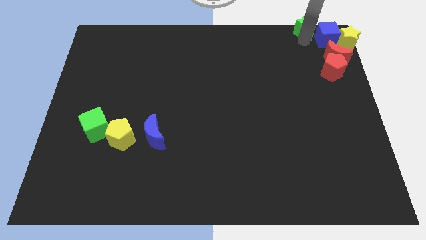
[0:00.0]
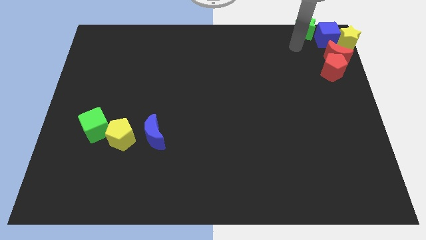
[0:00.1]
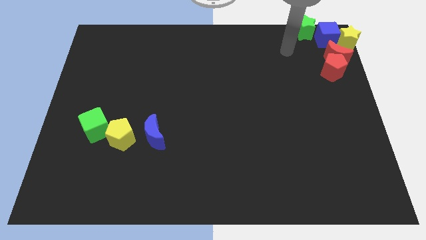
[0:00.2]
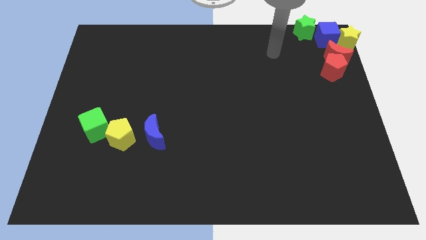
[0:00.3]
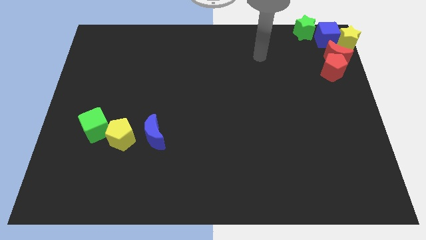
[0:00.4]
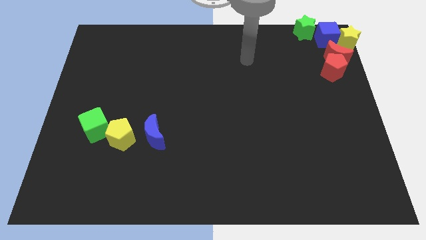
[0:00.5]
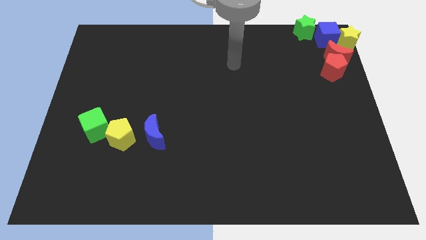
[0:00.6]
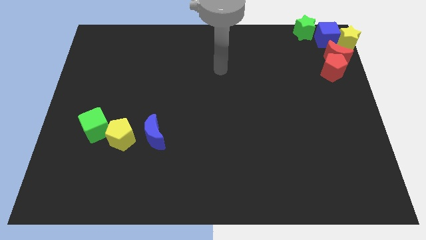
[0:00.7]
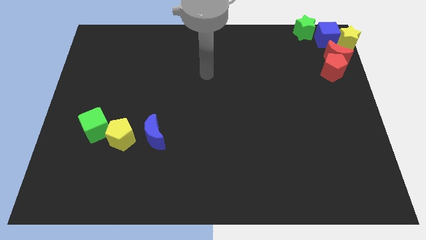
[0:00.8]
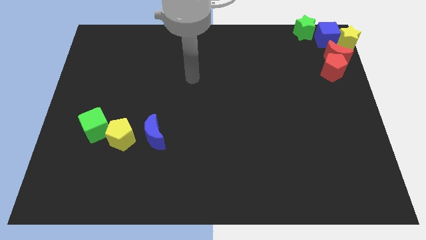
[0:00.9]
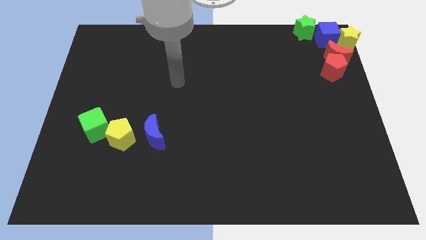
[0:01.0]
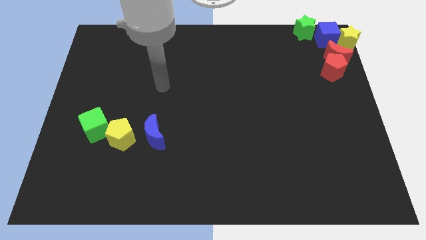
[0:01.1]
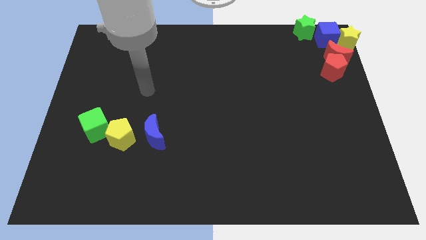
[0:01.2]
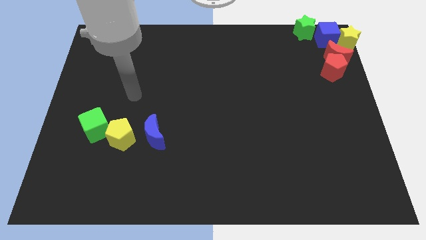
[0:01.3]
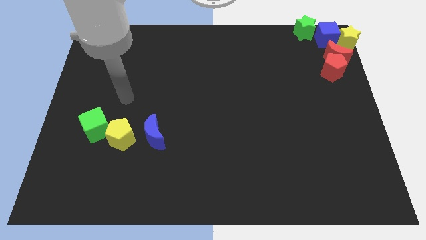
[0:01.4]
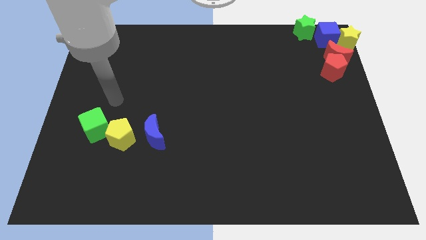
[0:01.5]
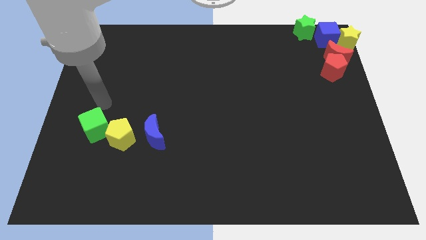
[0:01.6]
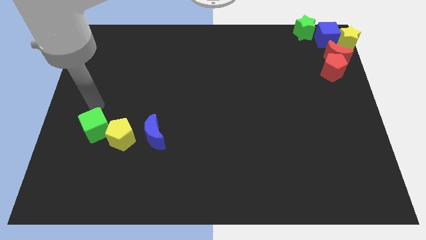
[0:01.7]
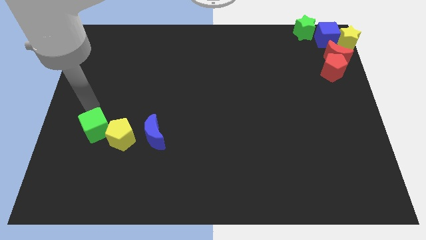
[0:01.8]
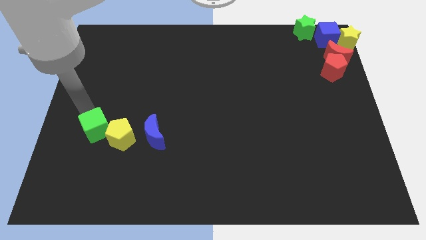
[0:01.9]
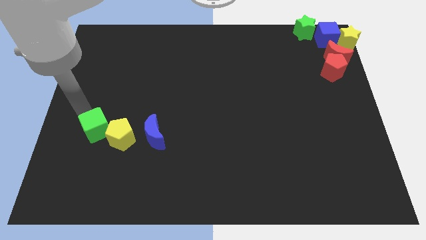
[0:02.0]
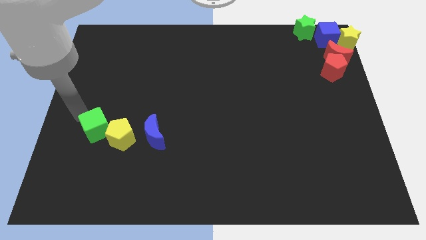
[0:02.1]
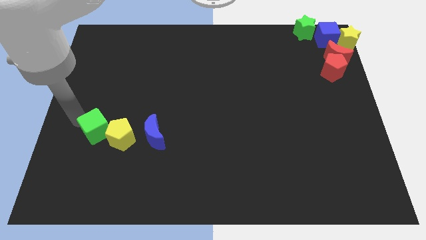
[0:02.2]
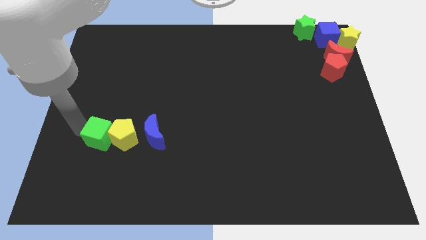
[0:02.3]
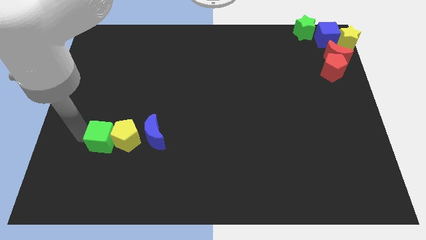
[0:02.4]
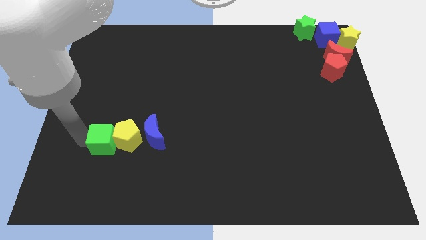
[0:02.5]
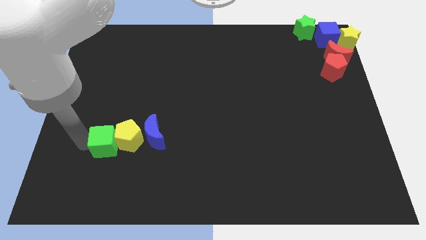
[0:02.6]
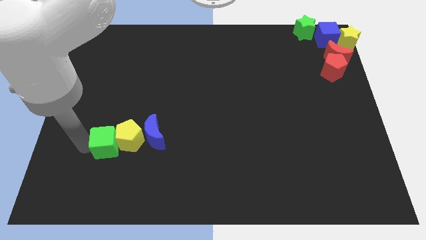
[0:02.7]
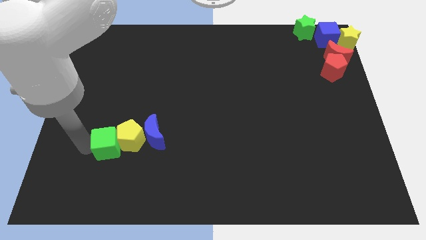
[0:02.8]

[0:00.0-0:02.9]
move your arm to the left of green cube

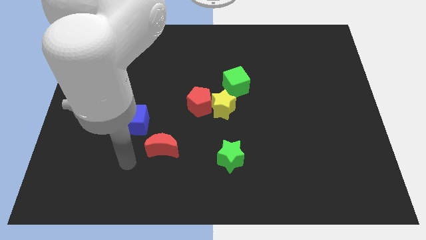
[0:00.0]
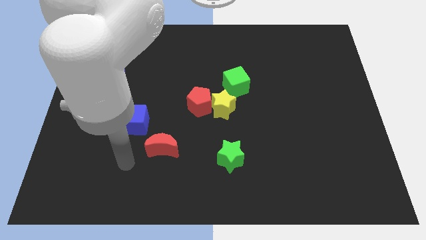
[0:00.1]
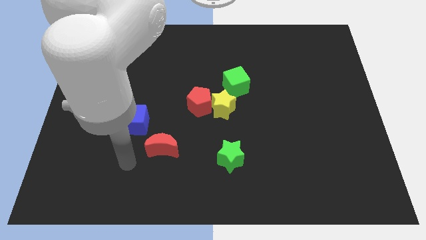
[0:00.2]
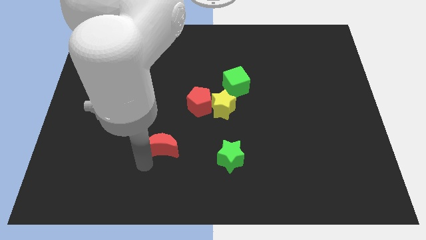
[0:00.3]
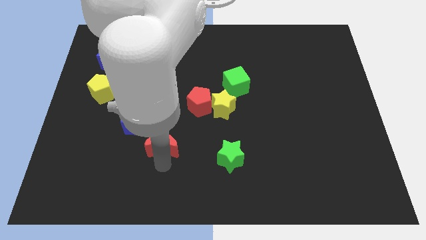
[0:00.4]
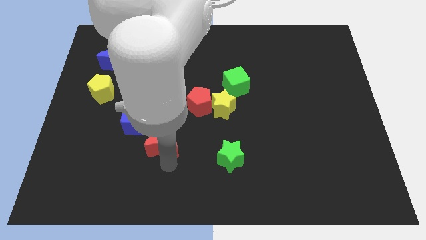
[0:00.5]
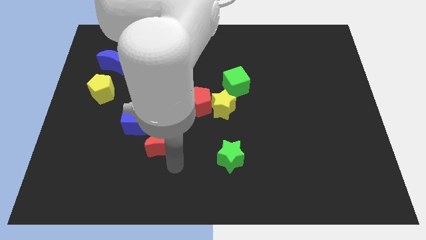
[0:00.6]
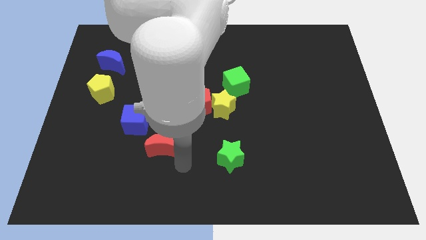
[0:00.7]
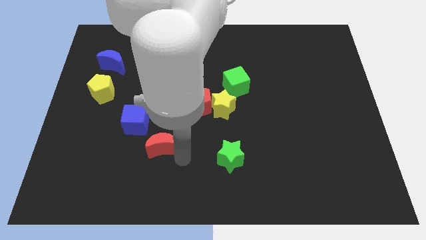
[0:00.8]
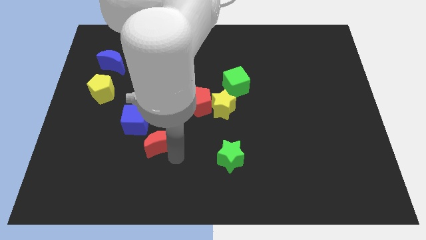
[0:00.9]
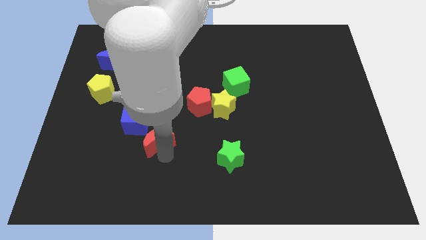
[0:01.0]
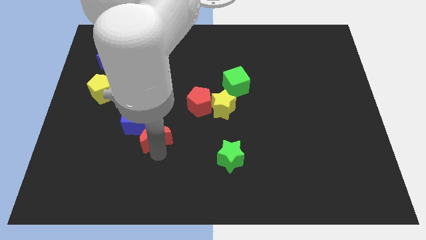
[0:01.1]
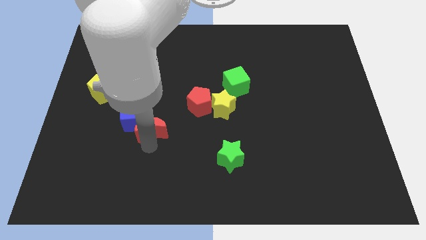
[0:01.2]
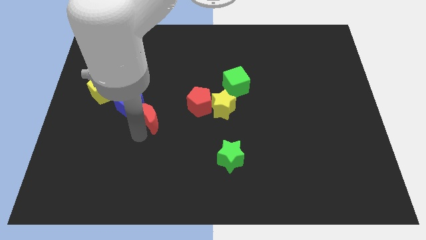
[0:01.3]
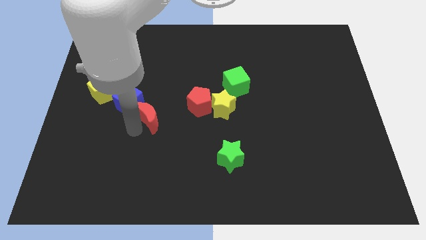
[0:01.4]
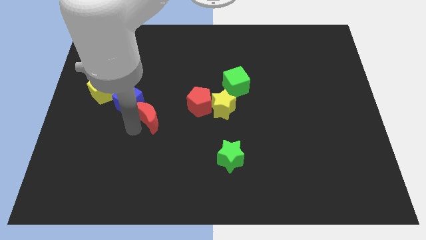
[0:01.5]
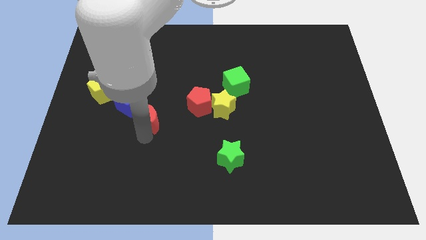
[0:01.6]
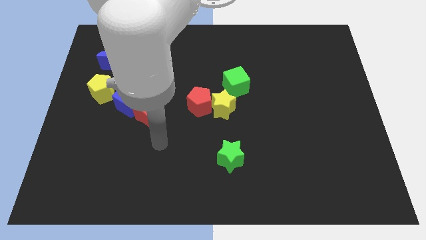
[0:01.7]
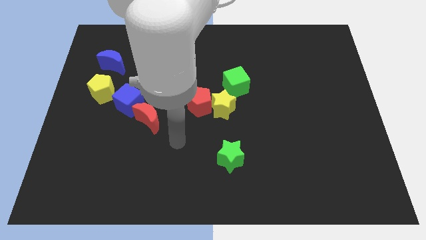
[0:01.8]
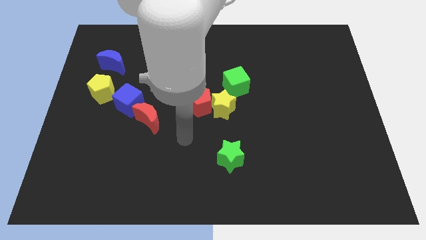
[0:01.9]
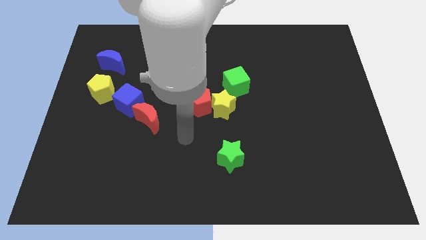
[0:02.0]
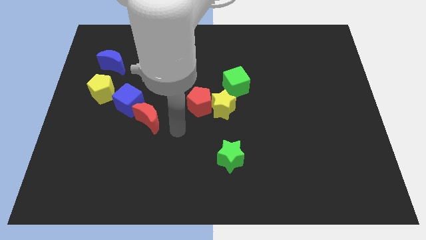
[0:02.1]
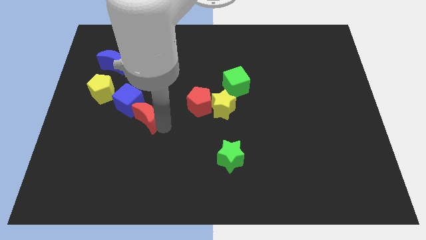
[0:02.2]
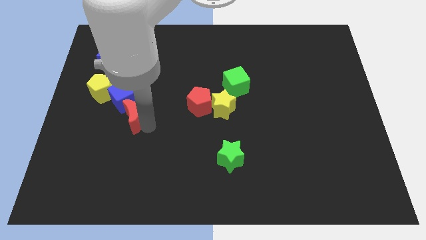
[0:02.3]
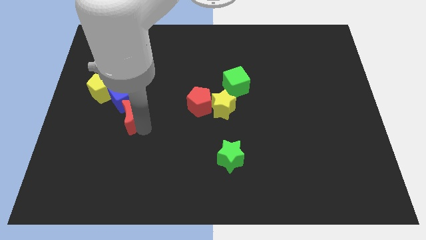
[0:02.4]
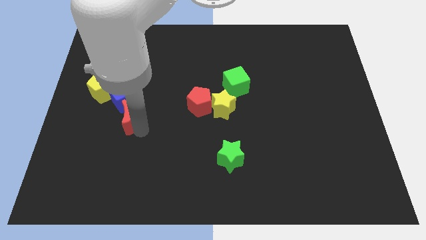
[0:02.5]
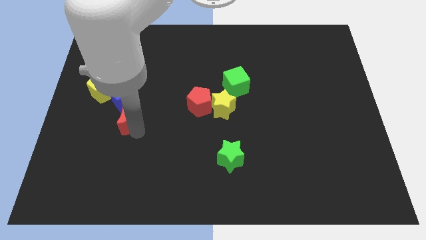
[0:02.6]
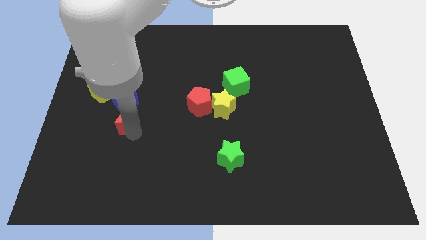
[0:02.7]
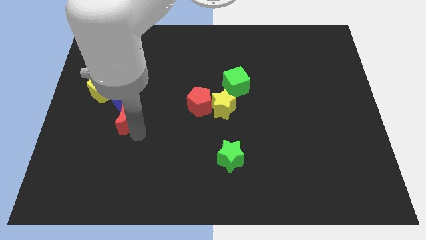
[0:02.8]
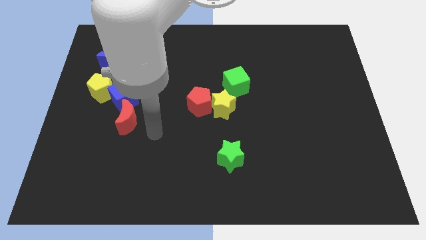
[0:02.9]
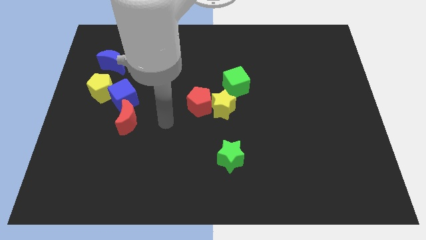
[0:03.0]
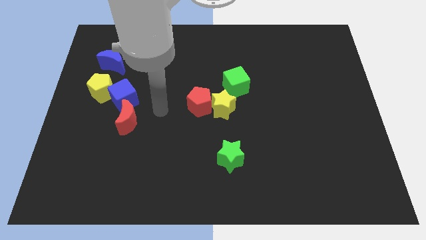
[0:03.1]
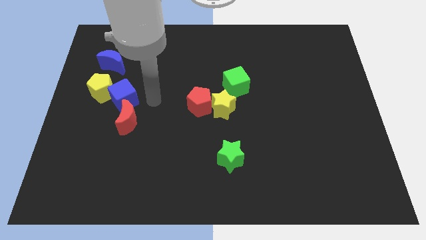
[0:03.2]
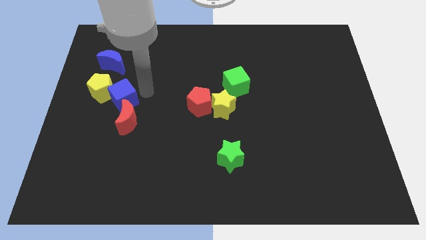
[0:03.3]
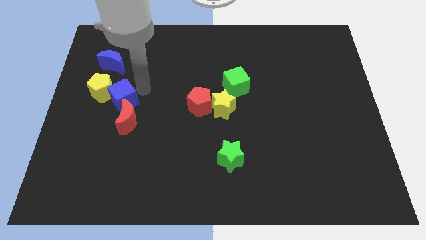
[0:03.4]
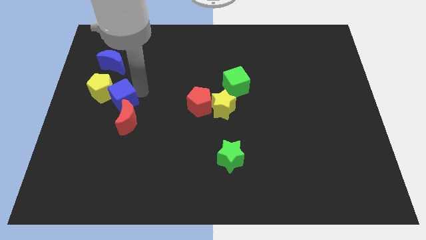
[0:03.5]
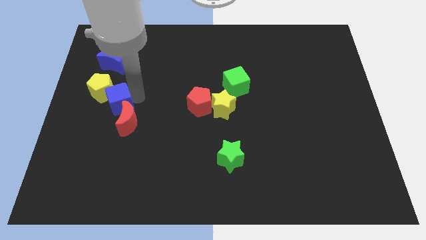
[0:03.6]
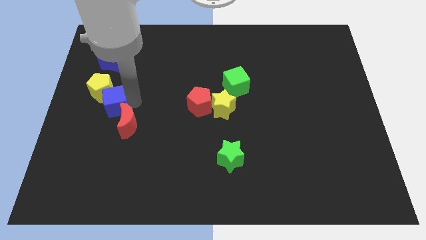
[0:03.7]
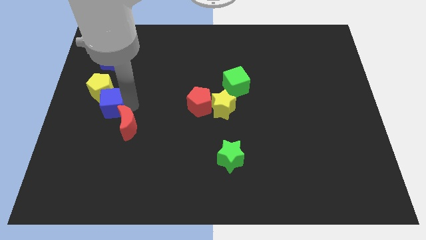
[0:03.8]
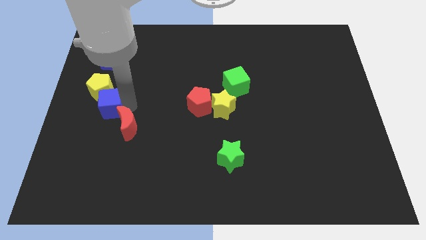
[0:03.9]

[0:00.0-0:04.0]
form a diagonal line with the yellow pentagonblue cube and red moon

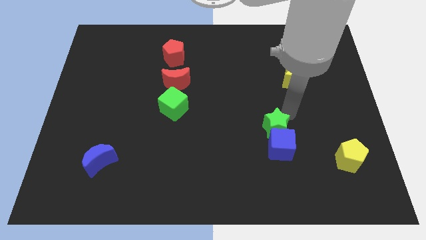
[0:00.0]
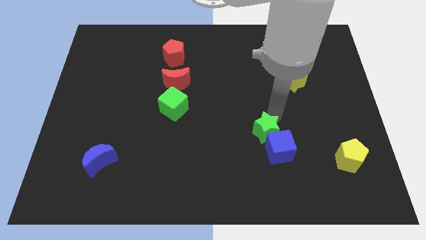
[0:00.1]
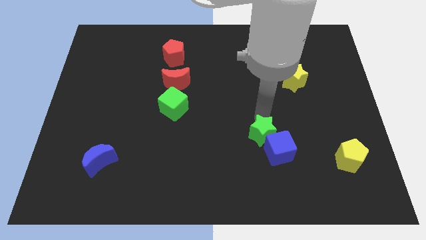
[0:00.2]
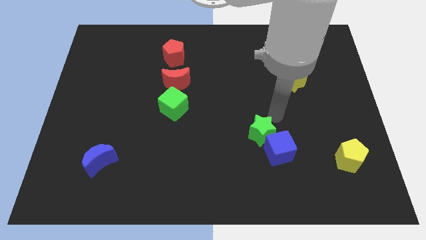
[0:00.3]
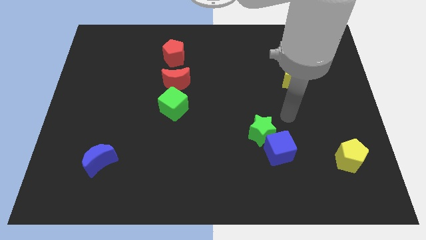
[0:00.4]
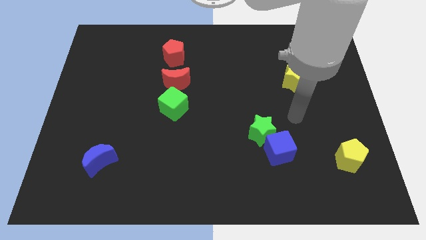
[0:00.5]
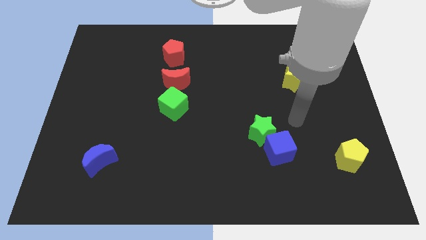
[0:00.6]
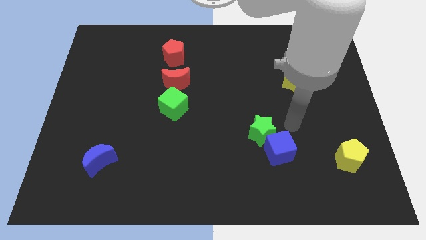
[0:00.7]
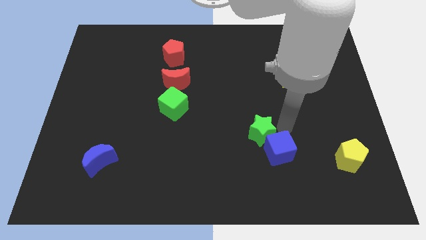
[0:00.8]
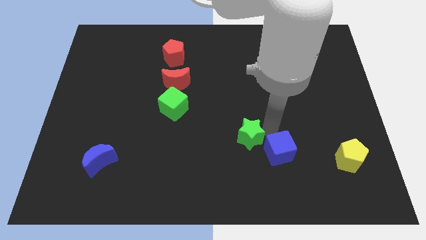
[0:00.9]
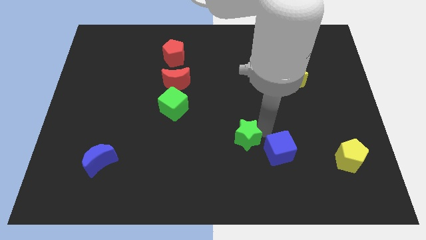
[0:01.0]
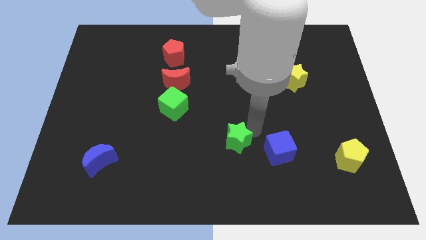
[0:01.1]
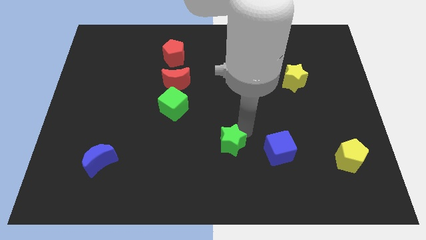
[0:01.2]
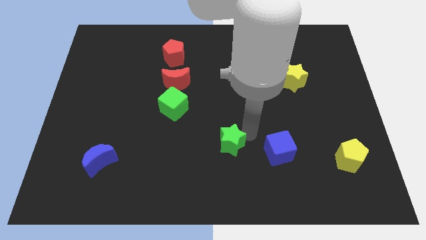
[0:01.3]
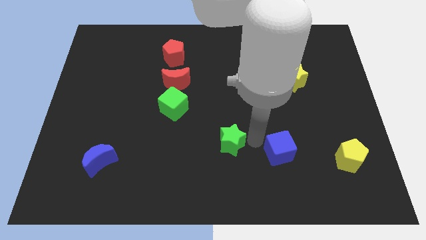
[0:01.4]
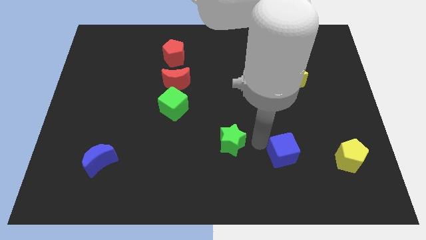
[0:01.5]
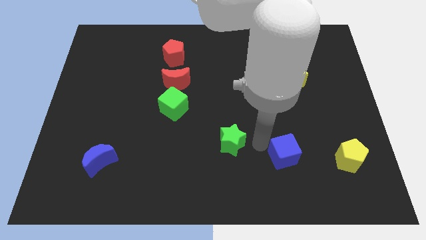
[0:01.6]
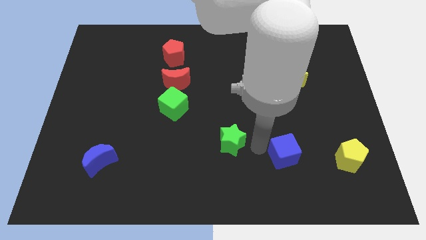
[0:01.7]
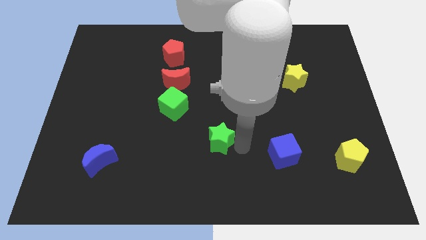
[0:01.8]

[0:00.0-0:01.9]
separate green star and blue cube

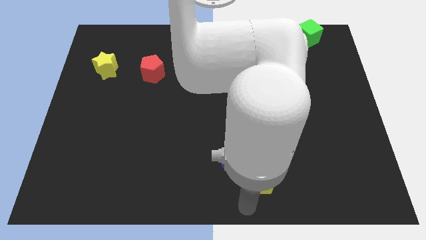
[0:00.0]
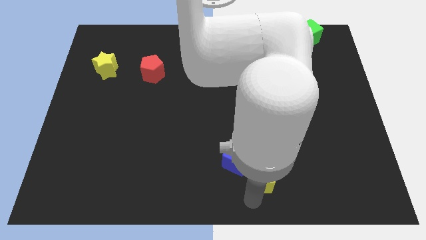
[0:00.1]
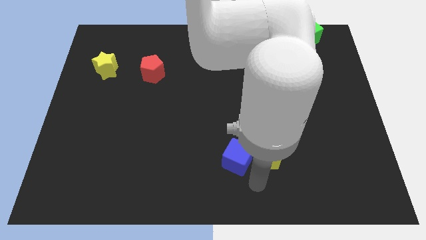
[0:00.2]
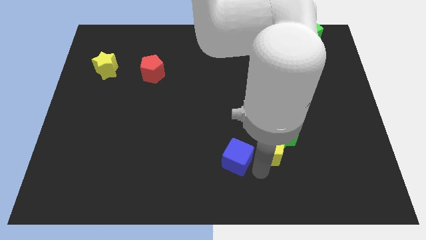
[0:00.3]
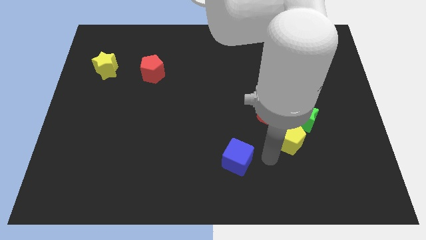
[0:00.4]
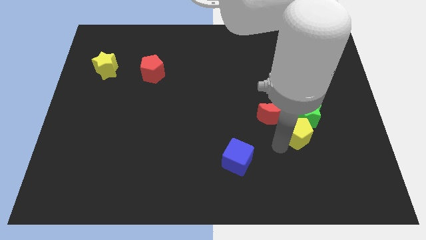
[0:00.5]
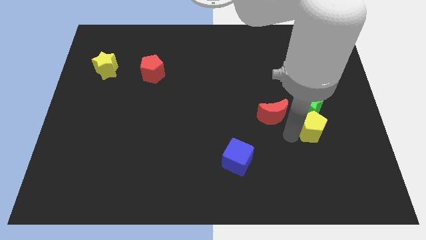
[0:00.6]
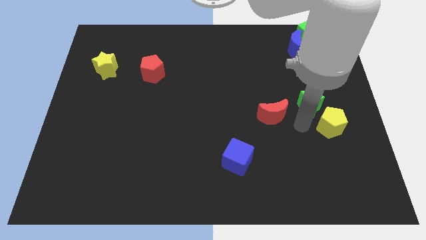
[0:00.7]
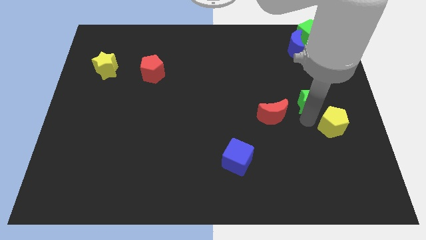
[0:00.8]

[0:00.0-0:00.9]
push the yellow pentagon and the green star to the top of the board
